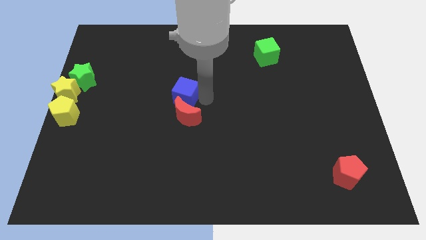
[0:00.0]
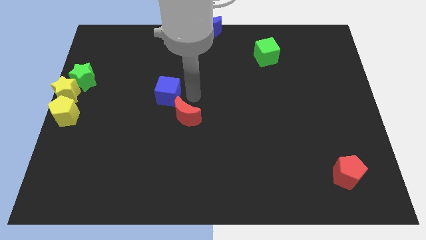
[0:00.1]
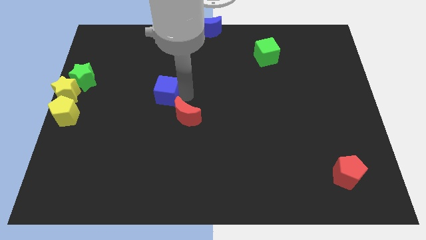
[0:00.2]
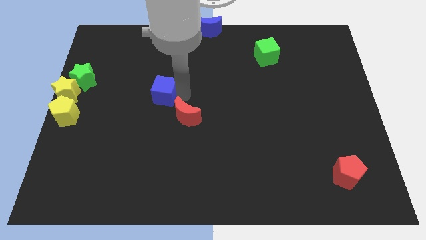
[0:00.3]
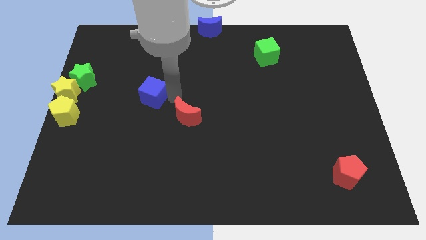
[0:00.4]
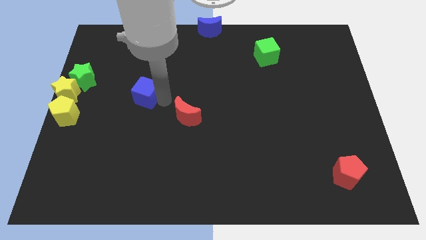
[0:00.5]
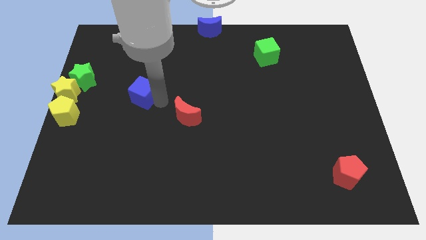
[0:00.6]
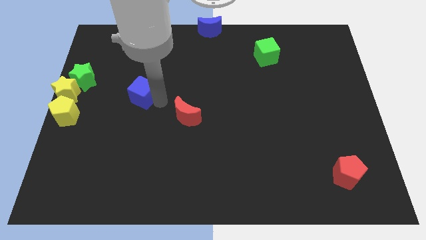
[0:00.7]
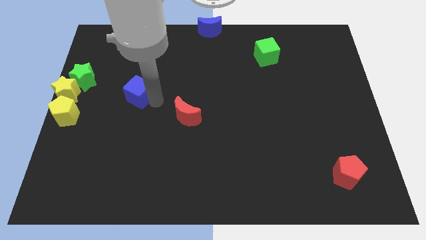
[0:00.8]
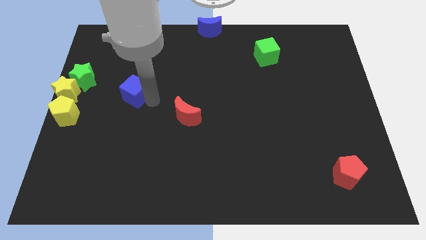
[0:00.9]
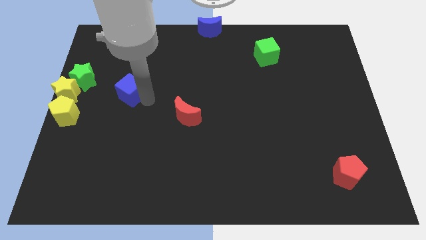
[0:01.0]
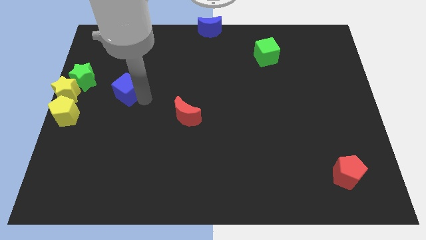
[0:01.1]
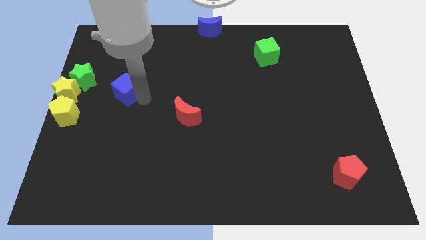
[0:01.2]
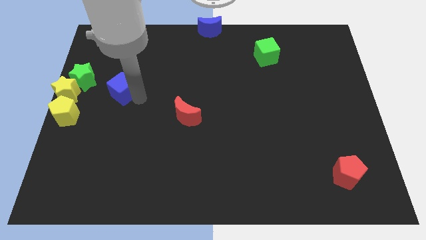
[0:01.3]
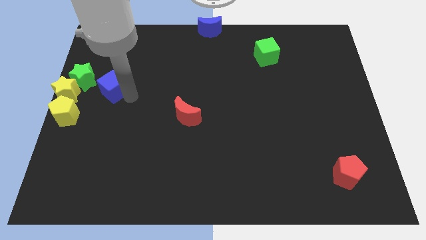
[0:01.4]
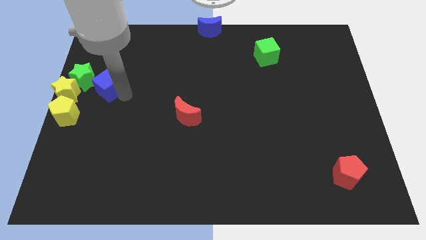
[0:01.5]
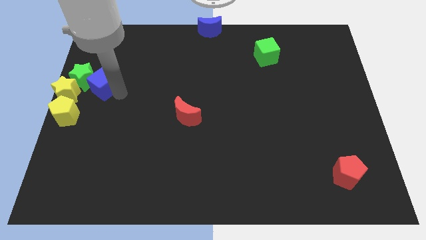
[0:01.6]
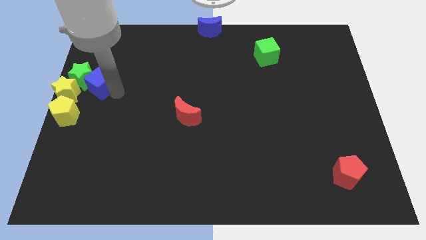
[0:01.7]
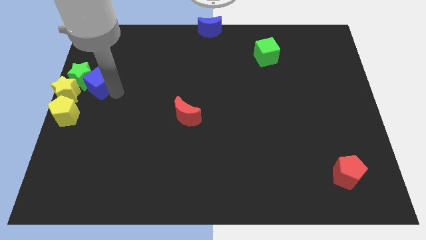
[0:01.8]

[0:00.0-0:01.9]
place blue cube near green star

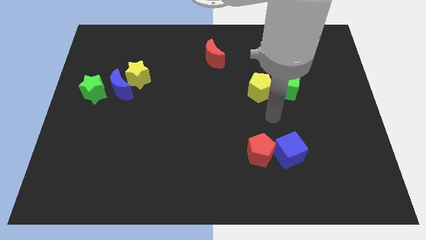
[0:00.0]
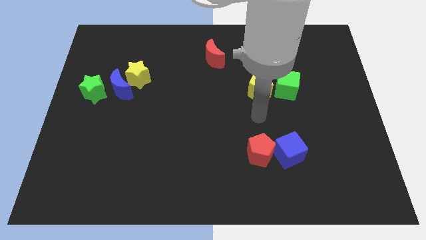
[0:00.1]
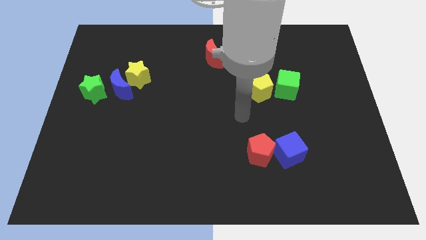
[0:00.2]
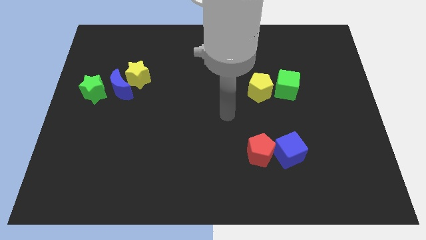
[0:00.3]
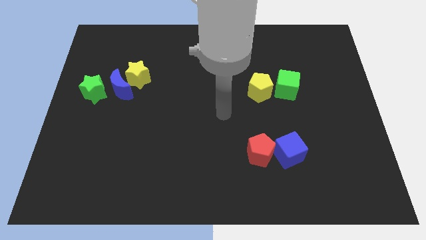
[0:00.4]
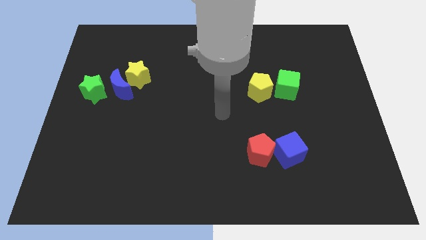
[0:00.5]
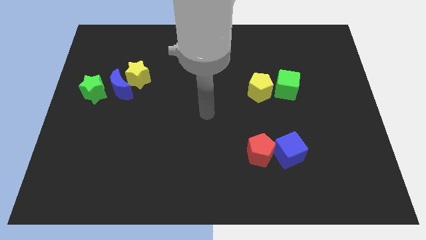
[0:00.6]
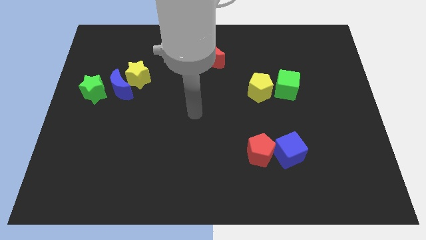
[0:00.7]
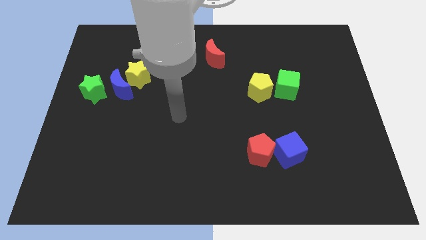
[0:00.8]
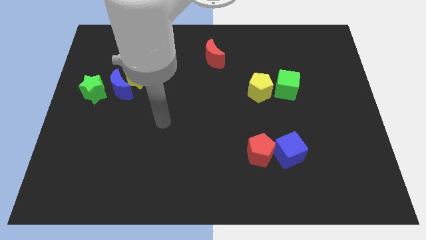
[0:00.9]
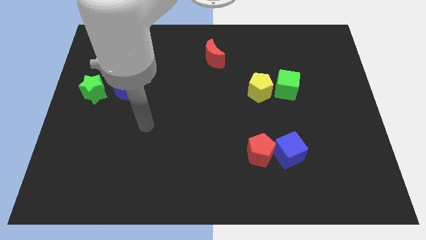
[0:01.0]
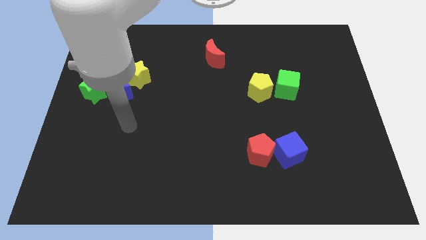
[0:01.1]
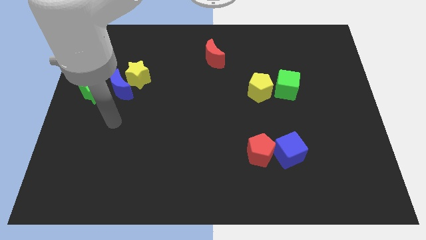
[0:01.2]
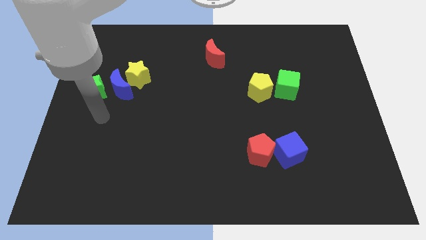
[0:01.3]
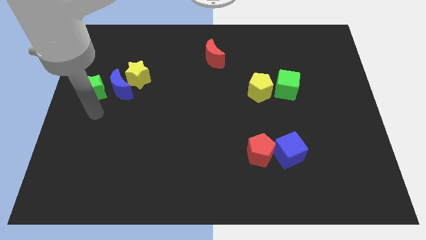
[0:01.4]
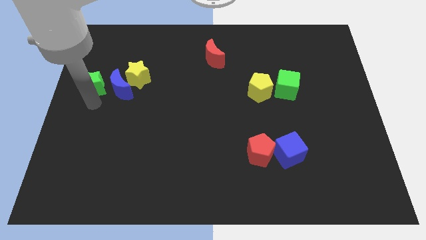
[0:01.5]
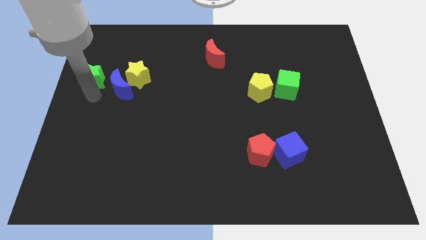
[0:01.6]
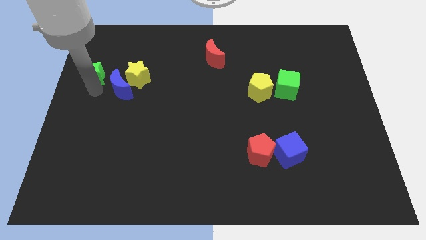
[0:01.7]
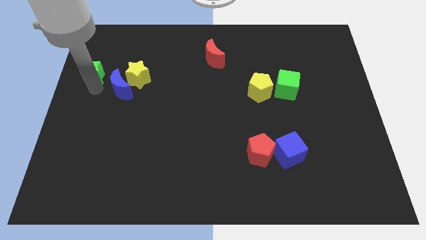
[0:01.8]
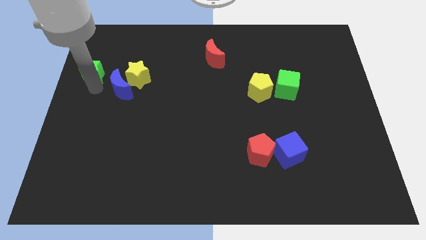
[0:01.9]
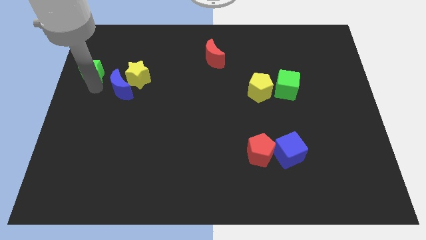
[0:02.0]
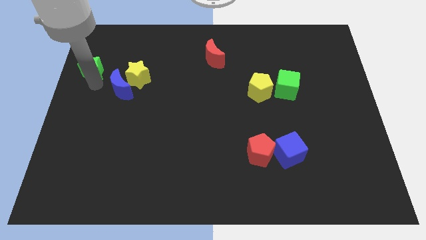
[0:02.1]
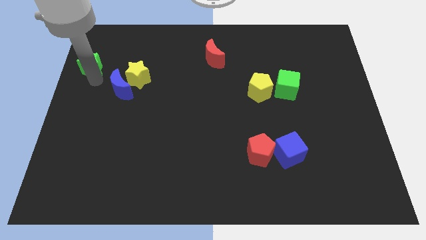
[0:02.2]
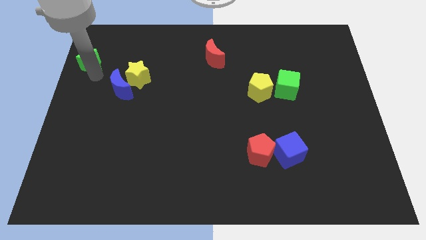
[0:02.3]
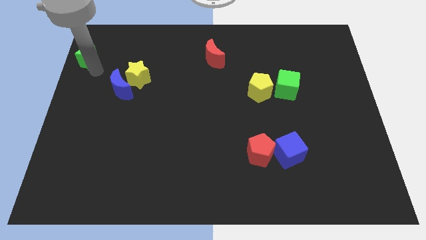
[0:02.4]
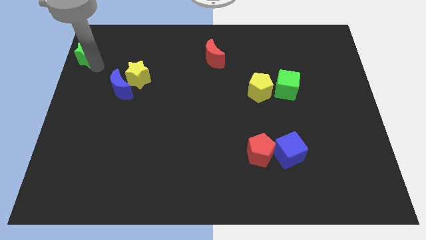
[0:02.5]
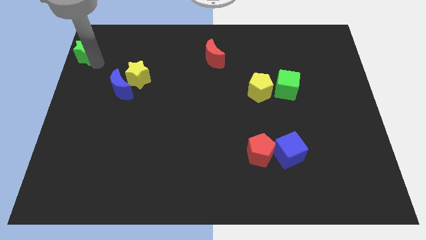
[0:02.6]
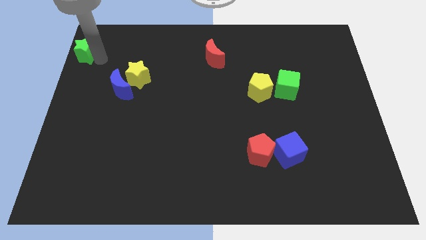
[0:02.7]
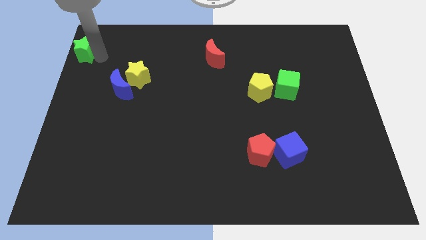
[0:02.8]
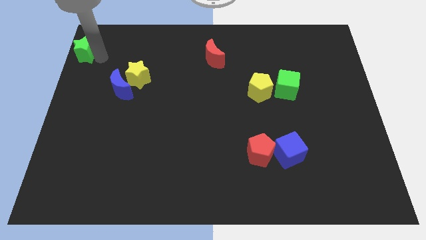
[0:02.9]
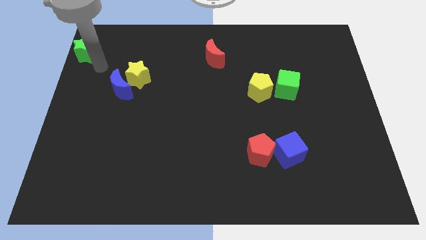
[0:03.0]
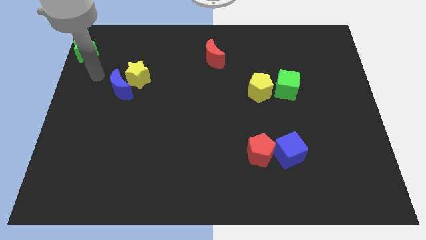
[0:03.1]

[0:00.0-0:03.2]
move the green star to the top left corner of the board

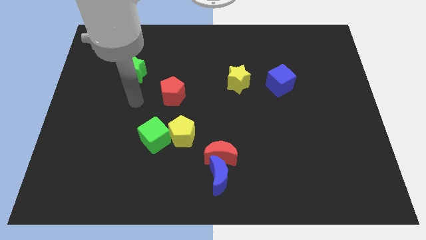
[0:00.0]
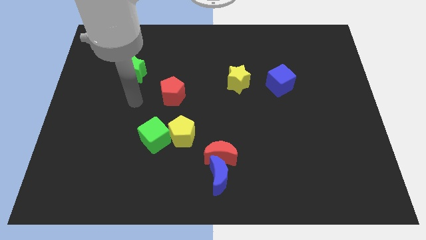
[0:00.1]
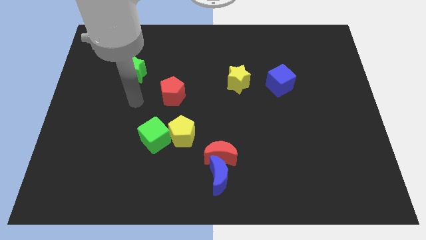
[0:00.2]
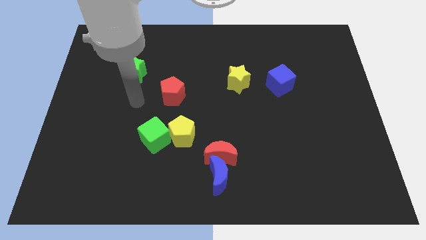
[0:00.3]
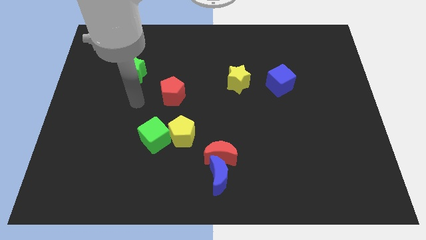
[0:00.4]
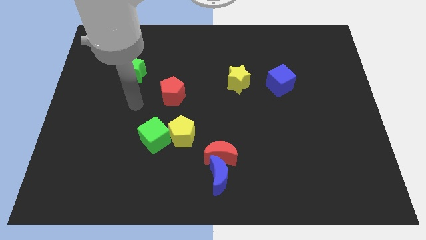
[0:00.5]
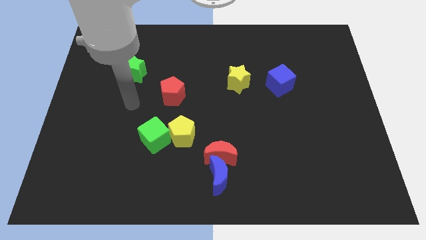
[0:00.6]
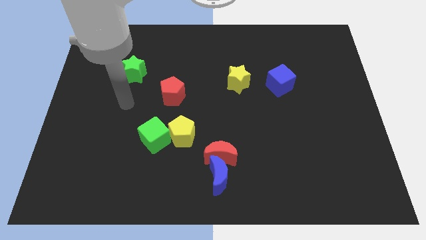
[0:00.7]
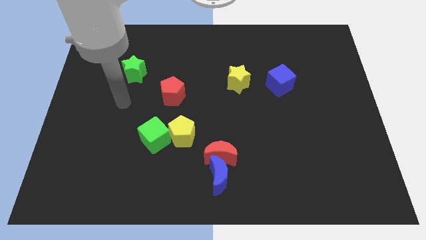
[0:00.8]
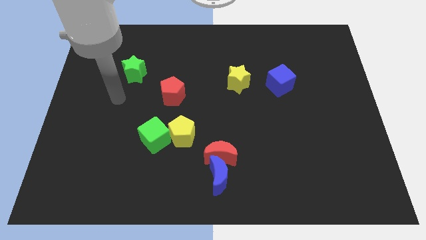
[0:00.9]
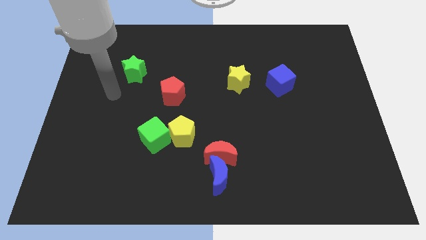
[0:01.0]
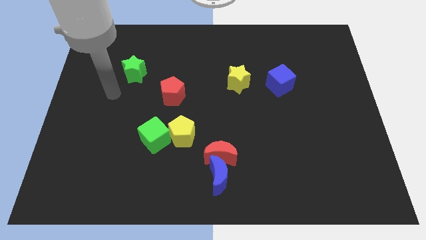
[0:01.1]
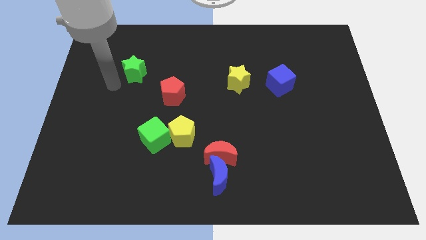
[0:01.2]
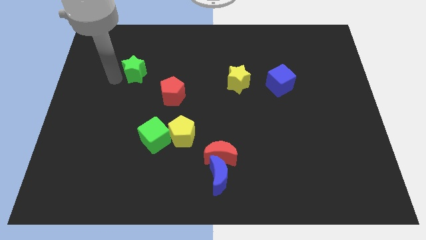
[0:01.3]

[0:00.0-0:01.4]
put your arm to the left of the green star

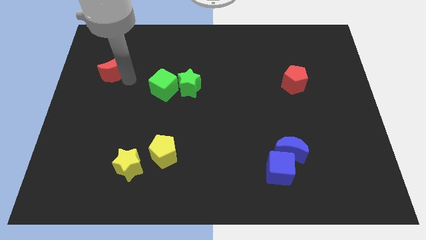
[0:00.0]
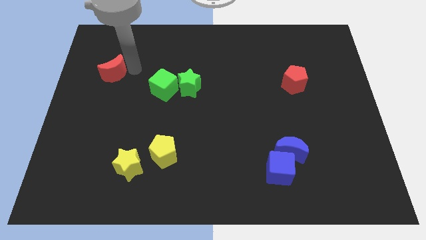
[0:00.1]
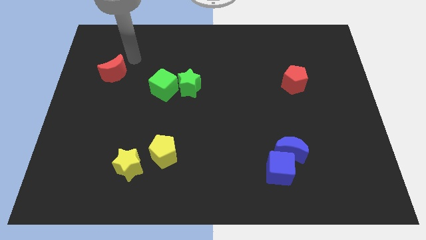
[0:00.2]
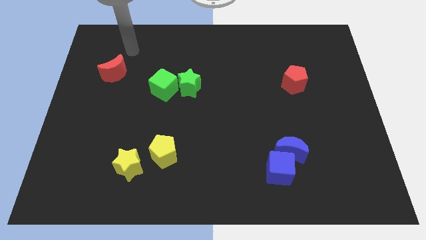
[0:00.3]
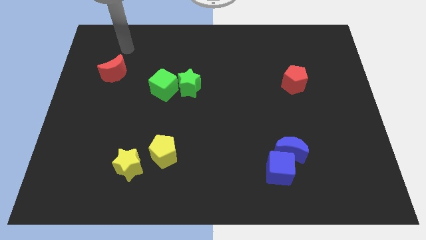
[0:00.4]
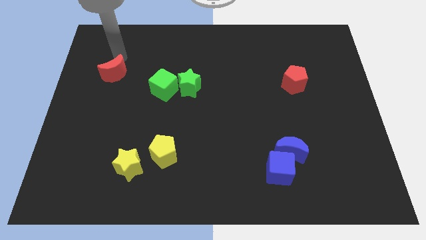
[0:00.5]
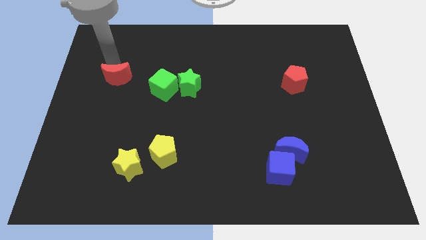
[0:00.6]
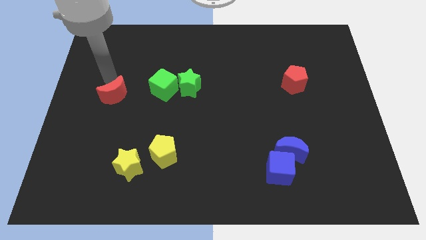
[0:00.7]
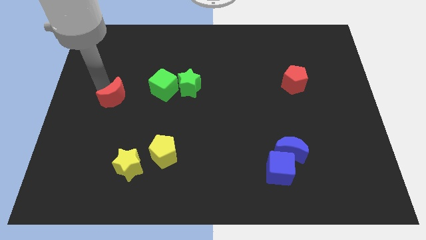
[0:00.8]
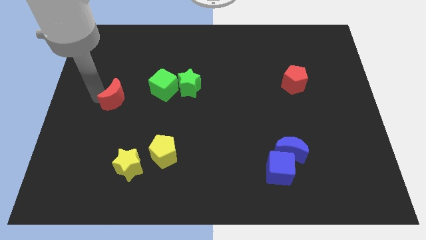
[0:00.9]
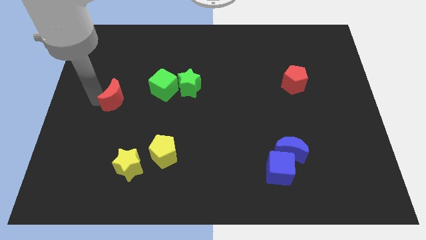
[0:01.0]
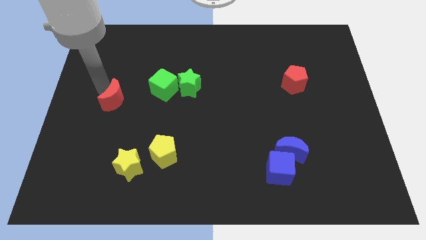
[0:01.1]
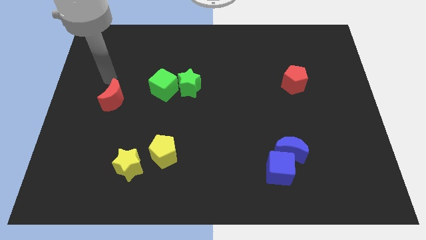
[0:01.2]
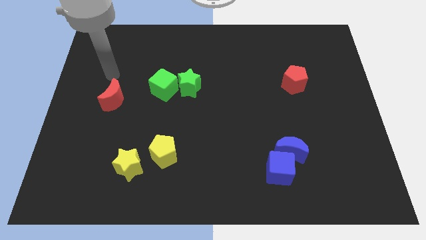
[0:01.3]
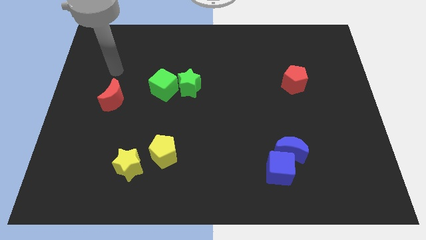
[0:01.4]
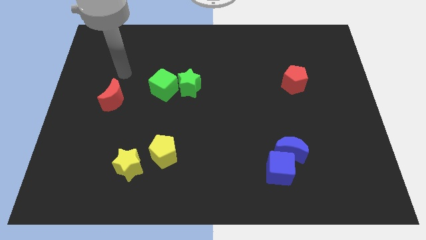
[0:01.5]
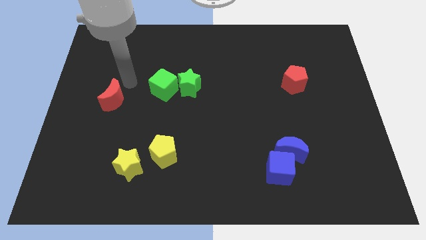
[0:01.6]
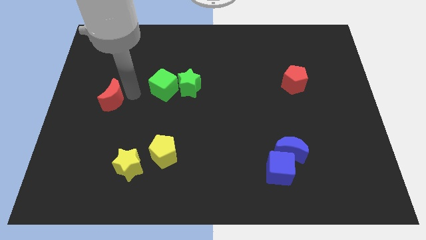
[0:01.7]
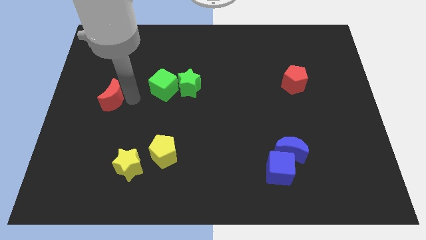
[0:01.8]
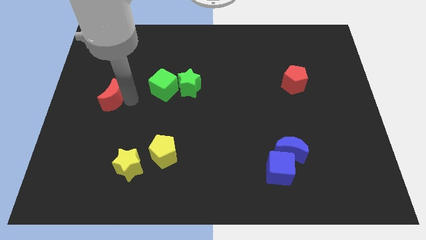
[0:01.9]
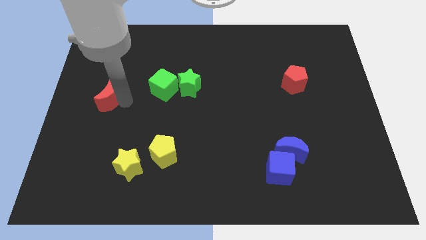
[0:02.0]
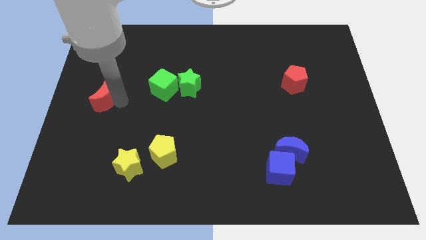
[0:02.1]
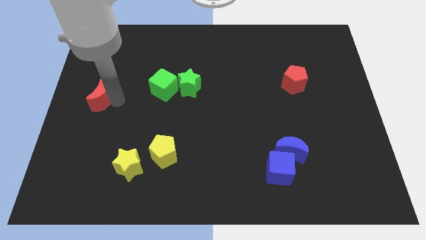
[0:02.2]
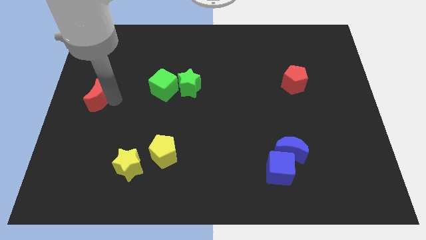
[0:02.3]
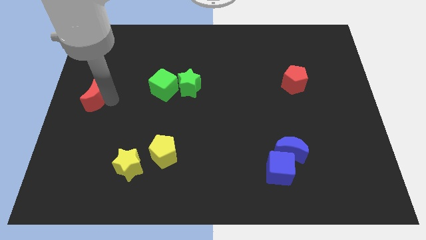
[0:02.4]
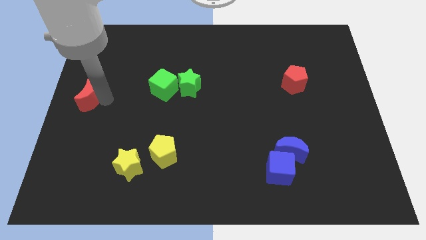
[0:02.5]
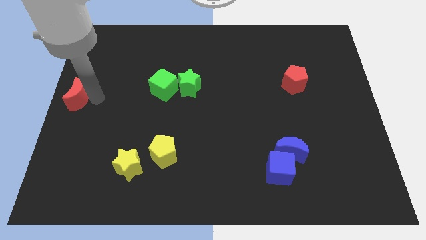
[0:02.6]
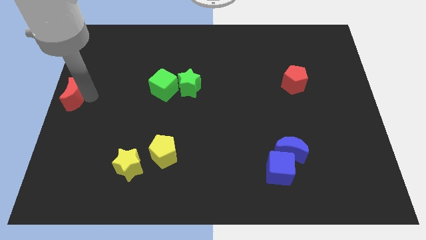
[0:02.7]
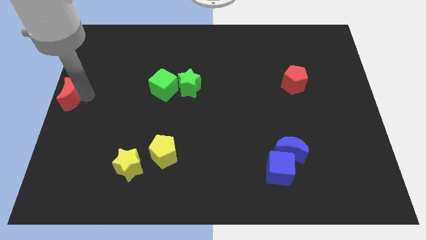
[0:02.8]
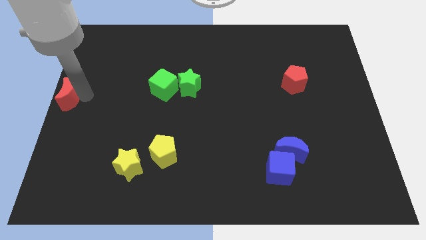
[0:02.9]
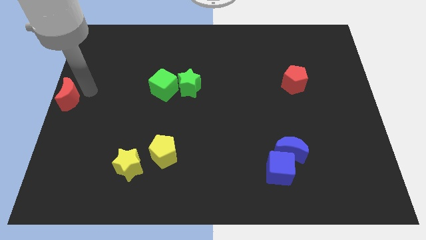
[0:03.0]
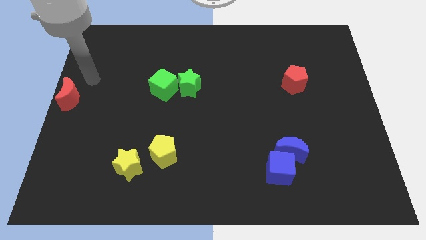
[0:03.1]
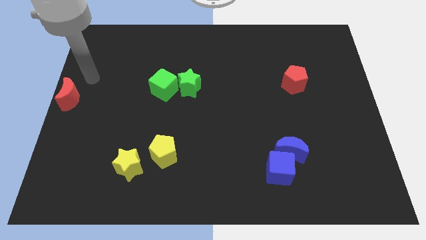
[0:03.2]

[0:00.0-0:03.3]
push the red moon to the center left of the board
